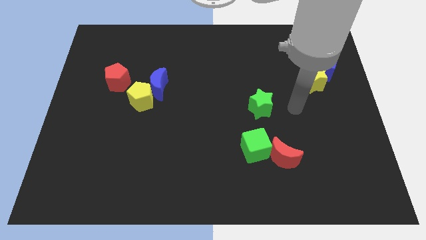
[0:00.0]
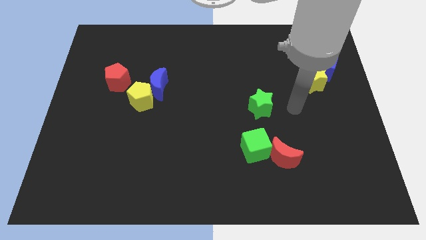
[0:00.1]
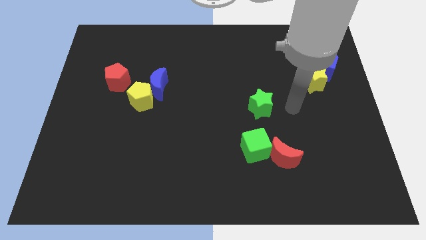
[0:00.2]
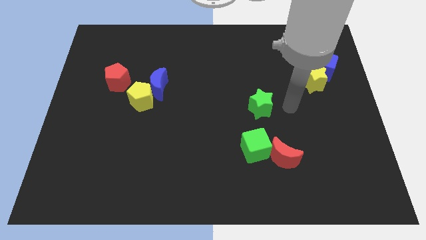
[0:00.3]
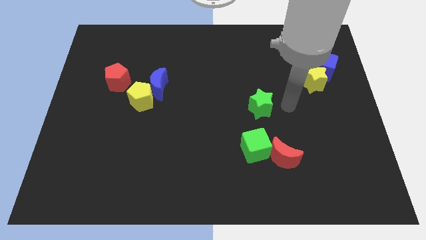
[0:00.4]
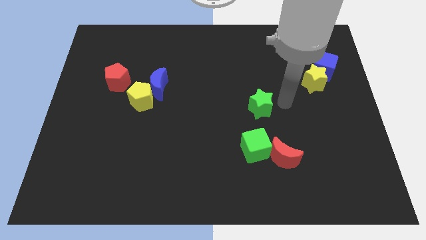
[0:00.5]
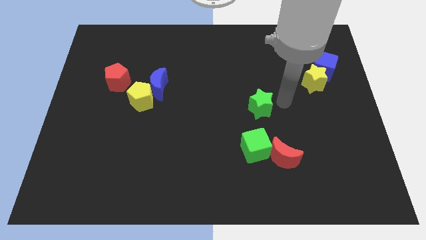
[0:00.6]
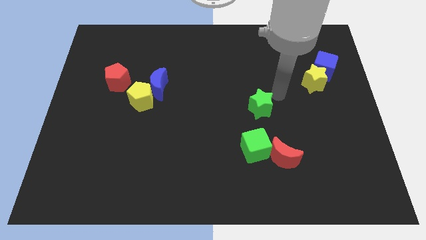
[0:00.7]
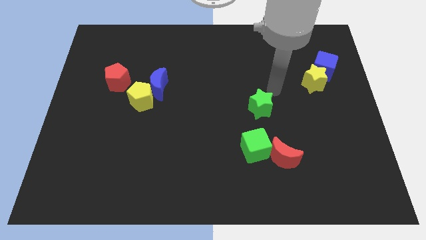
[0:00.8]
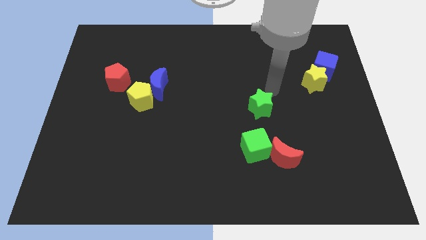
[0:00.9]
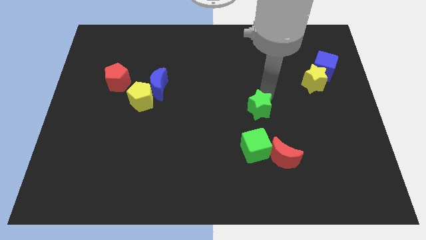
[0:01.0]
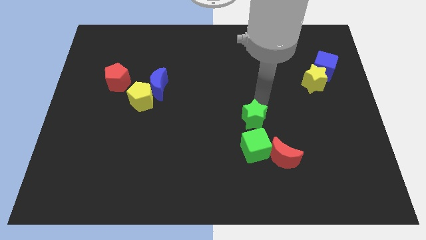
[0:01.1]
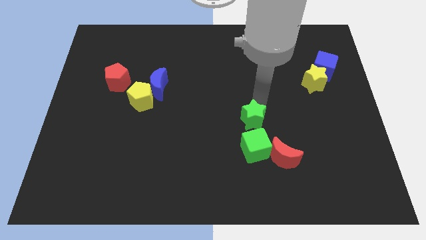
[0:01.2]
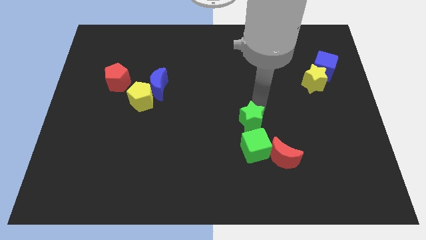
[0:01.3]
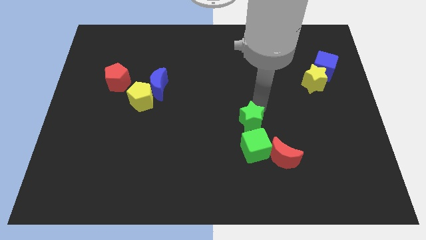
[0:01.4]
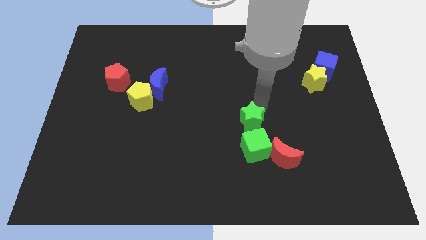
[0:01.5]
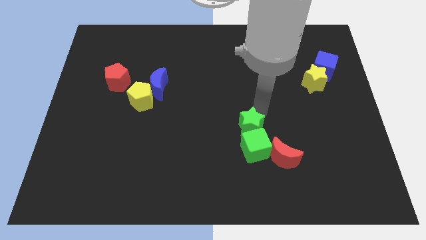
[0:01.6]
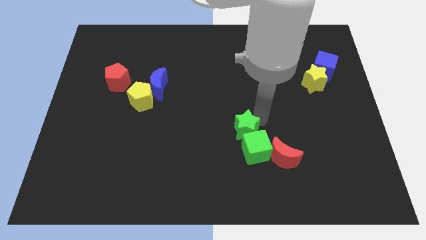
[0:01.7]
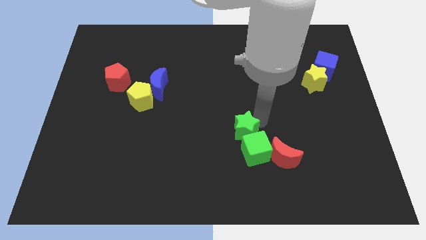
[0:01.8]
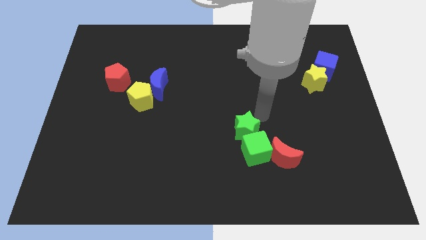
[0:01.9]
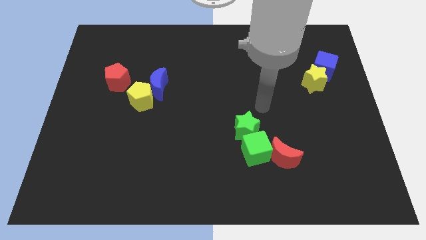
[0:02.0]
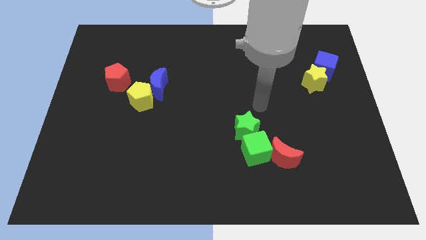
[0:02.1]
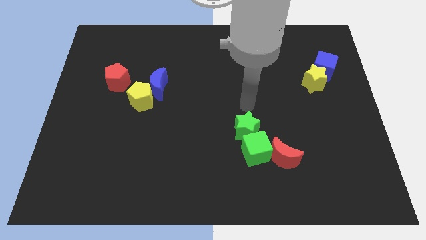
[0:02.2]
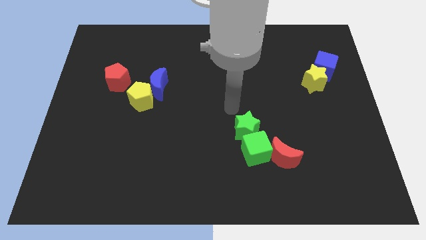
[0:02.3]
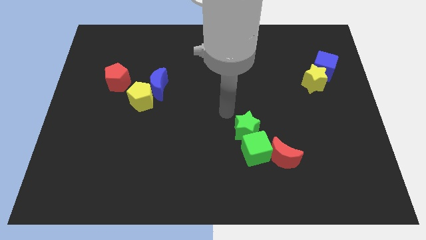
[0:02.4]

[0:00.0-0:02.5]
push the green star into the green cube

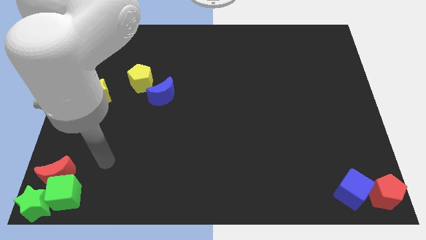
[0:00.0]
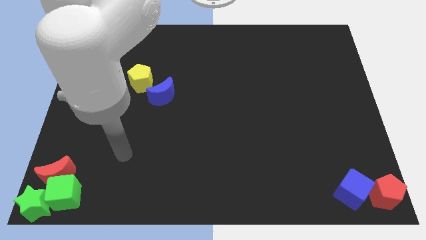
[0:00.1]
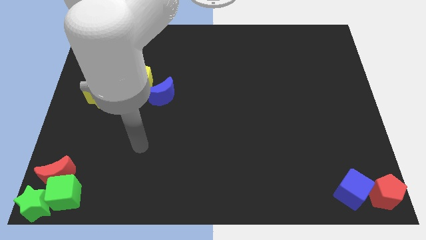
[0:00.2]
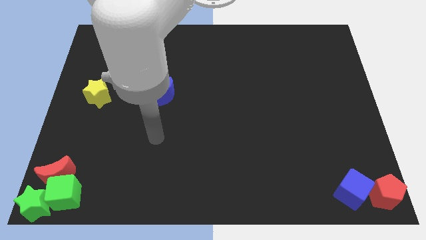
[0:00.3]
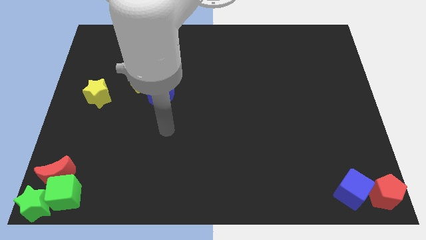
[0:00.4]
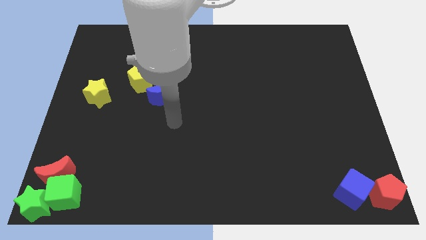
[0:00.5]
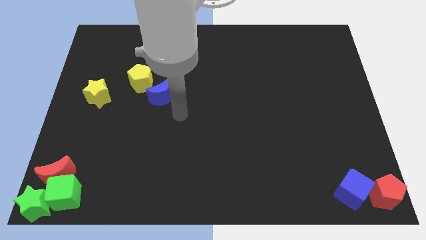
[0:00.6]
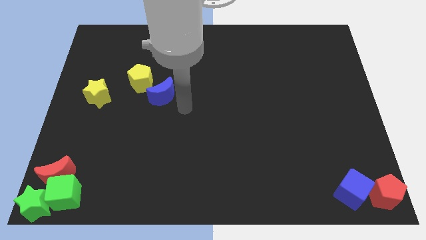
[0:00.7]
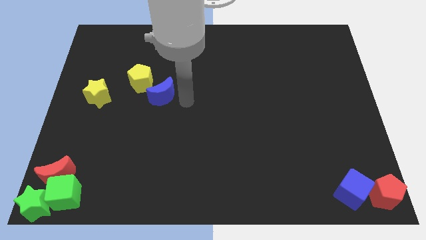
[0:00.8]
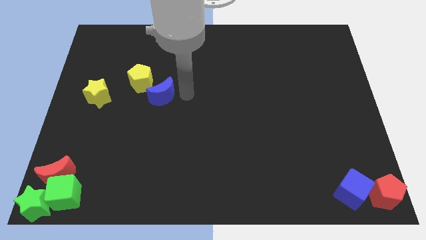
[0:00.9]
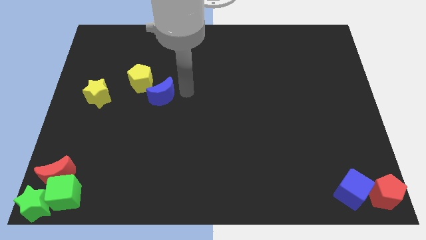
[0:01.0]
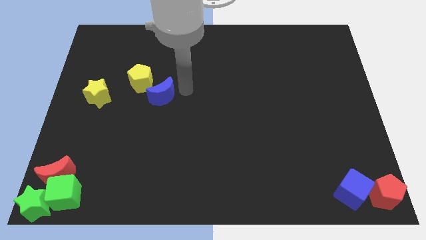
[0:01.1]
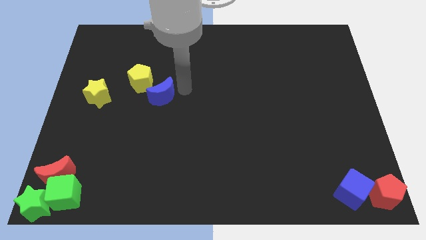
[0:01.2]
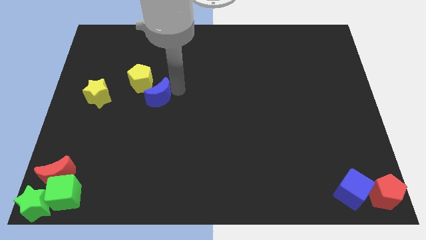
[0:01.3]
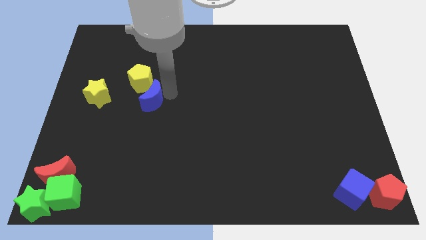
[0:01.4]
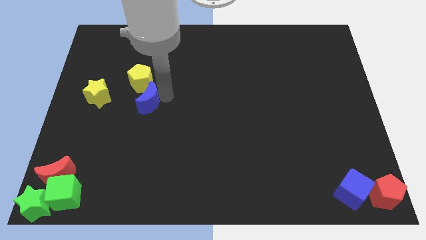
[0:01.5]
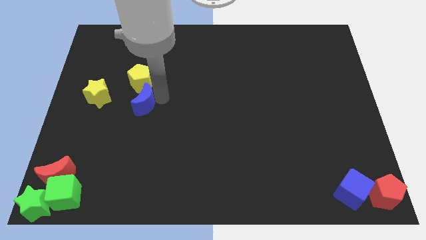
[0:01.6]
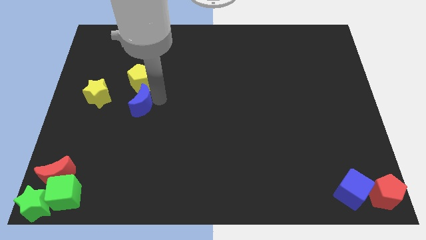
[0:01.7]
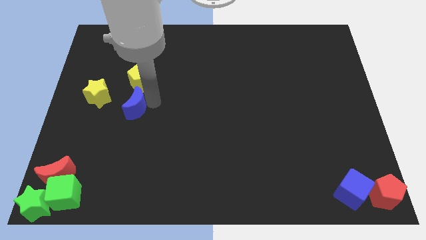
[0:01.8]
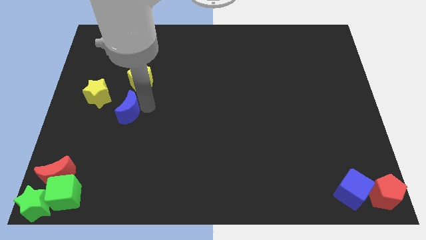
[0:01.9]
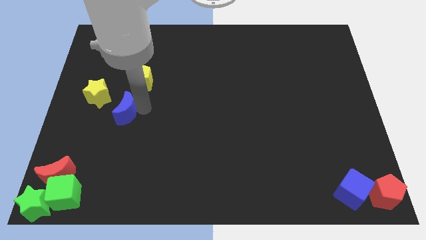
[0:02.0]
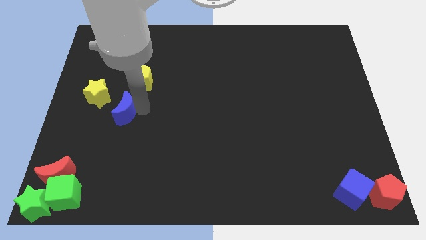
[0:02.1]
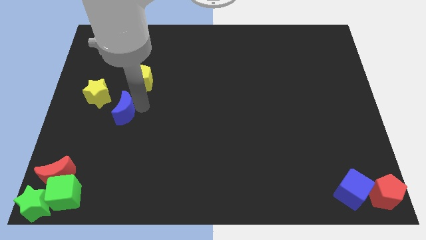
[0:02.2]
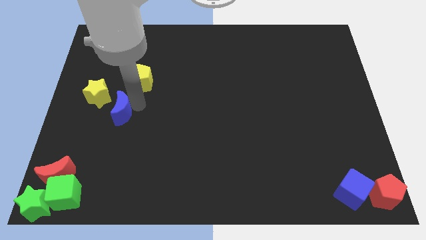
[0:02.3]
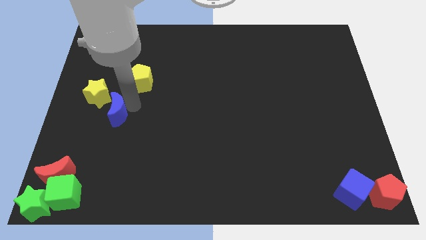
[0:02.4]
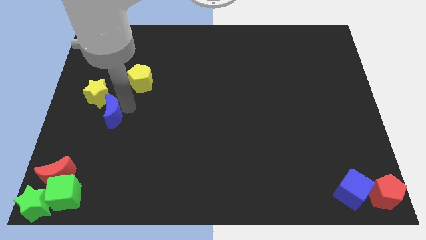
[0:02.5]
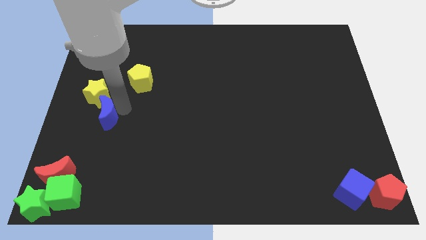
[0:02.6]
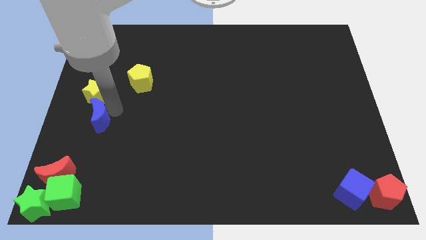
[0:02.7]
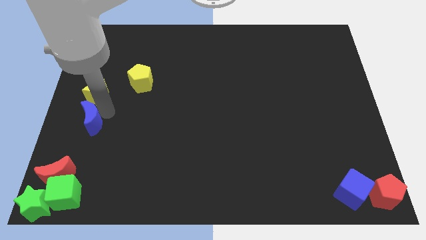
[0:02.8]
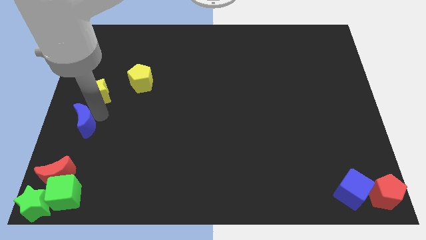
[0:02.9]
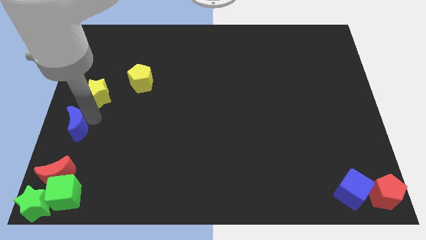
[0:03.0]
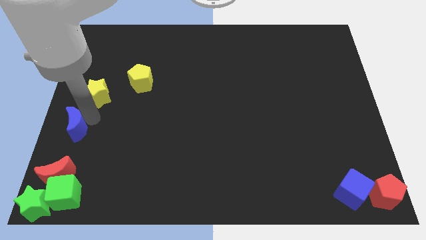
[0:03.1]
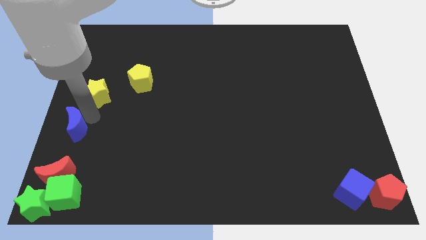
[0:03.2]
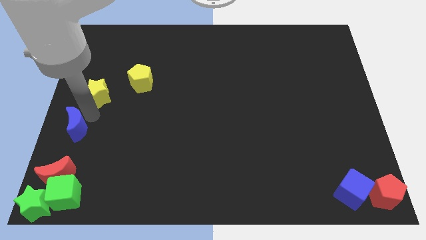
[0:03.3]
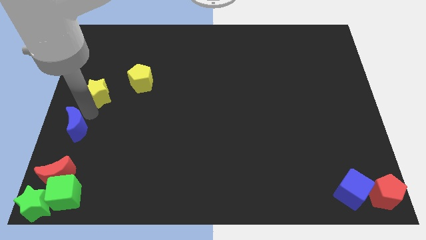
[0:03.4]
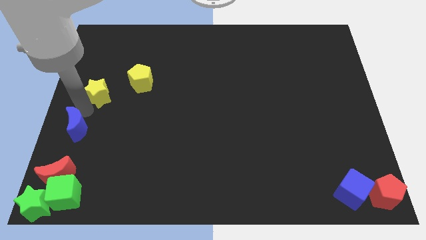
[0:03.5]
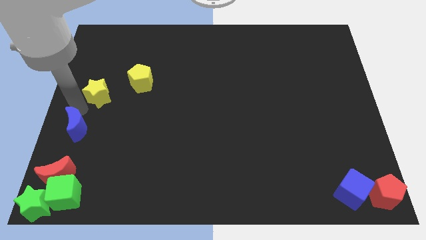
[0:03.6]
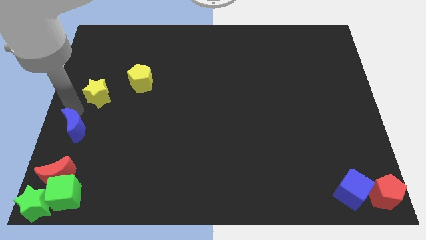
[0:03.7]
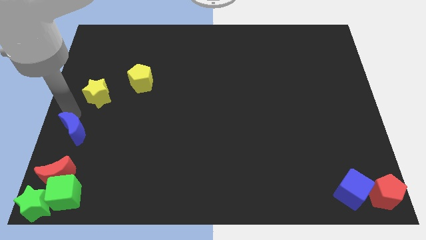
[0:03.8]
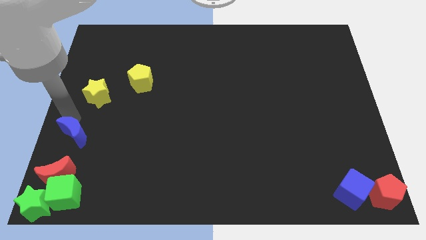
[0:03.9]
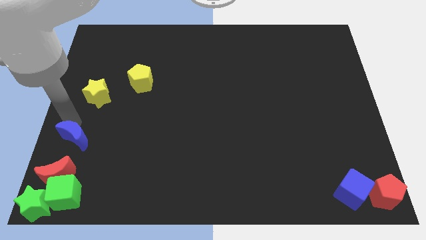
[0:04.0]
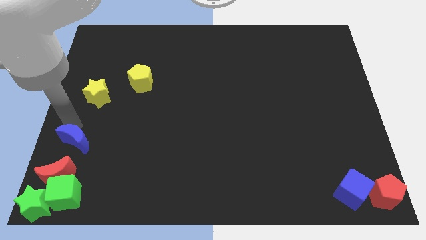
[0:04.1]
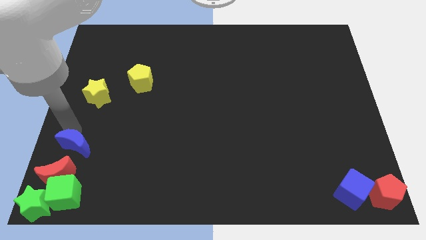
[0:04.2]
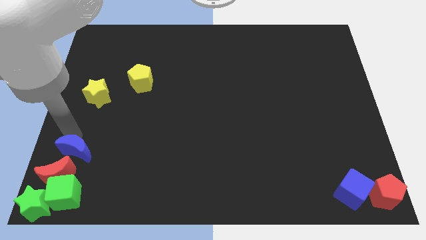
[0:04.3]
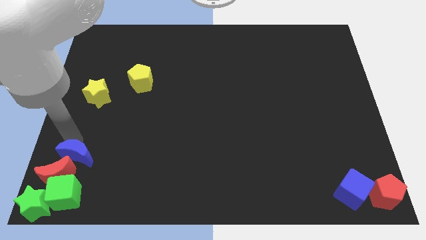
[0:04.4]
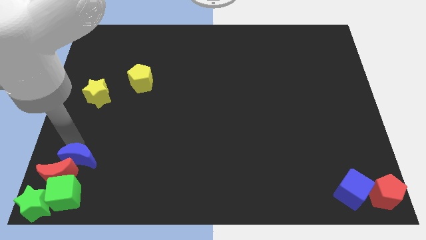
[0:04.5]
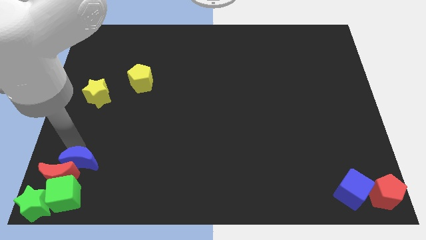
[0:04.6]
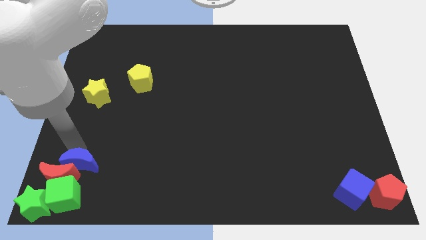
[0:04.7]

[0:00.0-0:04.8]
slide the blue crescent into the top side of the red moon

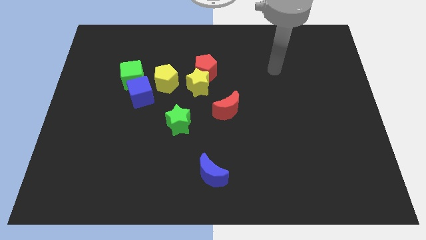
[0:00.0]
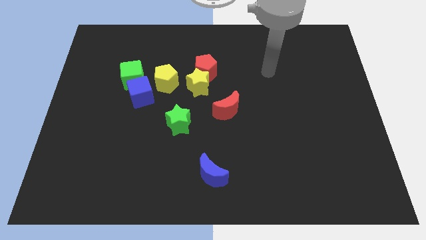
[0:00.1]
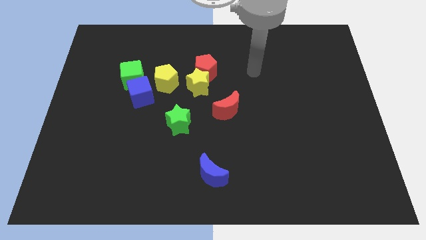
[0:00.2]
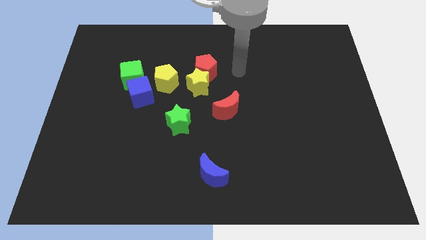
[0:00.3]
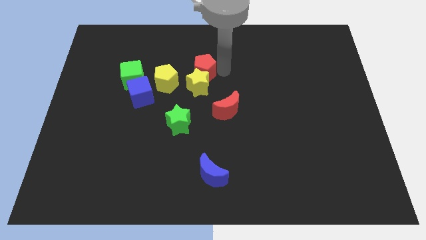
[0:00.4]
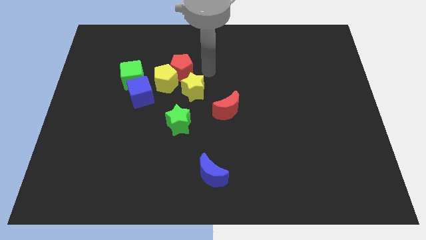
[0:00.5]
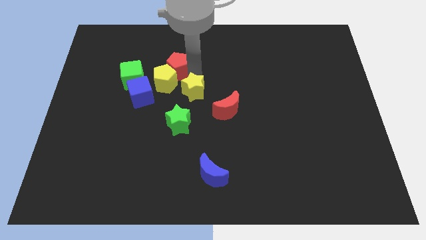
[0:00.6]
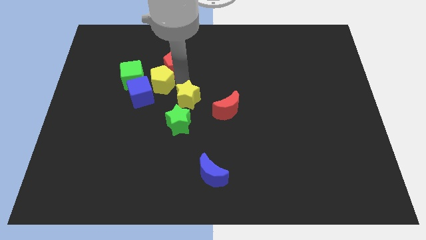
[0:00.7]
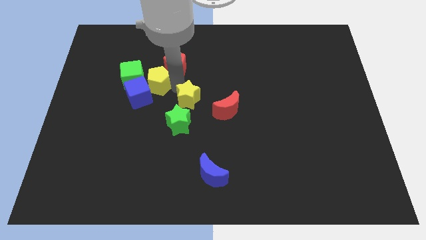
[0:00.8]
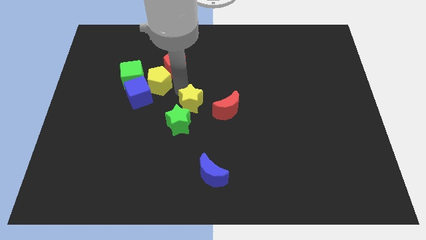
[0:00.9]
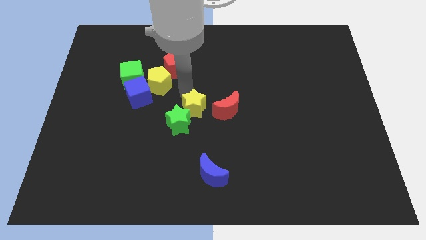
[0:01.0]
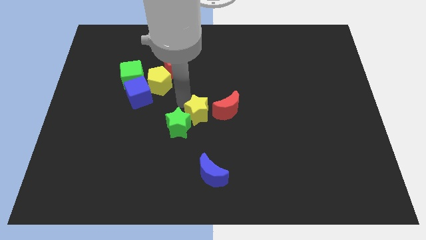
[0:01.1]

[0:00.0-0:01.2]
separate the red pentagon and the yellow star

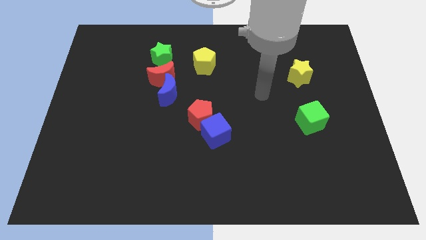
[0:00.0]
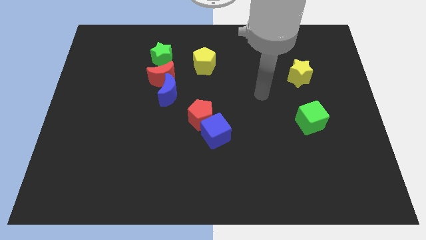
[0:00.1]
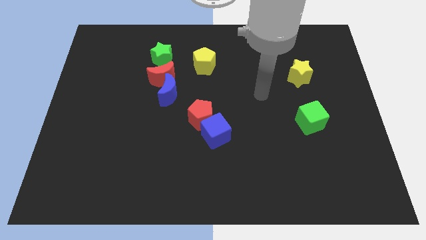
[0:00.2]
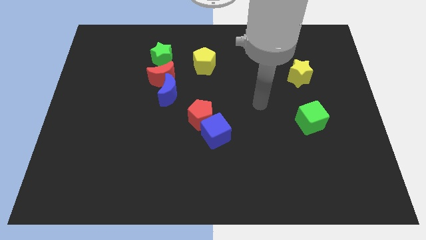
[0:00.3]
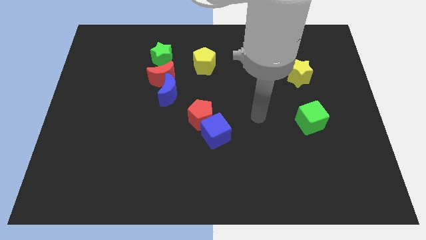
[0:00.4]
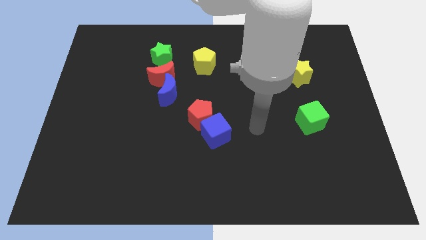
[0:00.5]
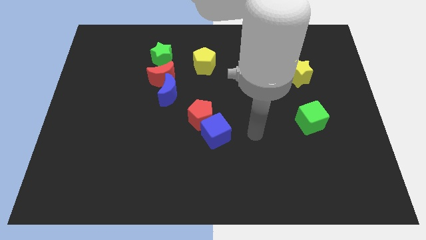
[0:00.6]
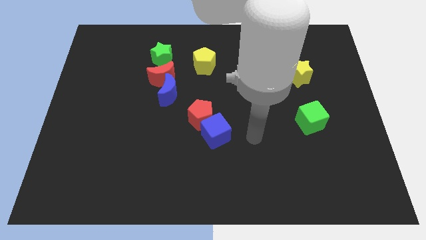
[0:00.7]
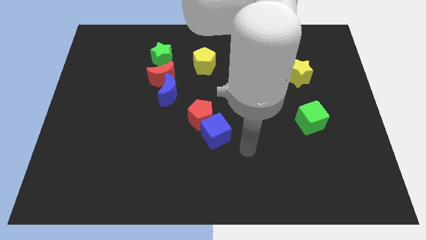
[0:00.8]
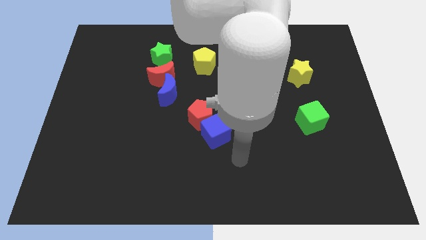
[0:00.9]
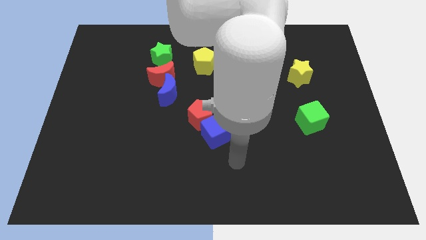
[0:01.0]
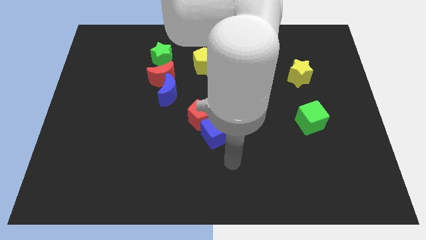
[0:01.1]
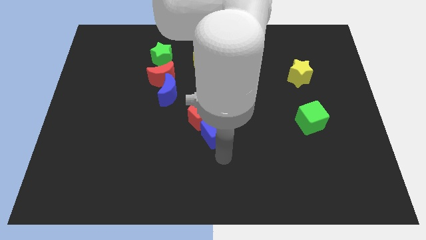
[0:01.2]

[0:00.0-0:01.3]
move your hand to the bottom of the blue cube
